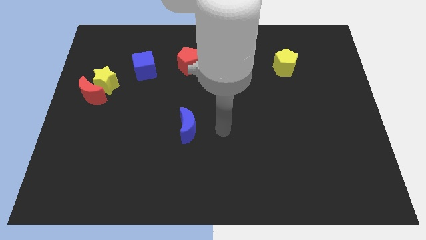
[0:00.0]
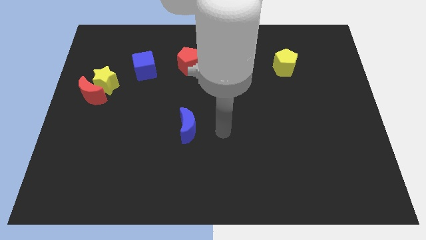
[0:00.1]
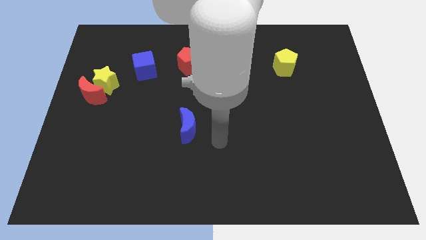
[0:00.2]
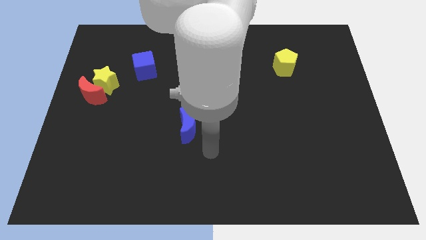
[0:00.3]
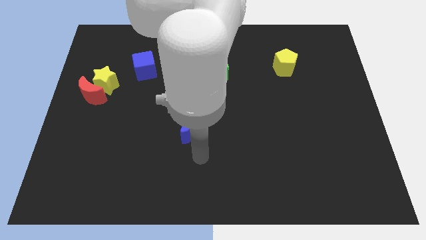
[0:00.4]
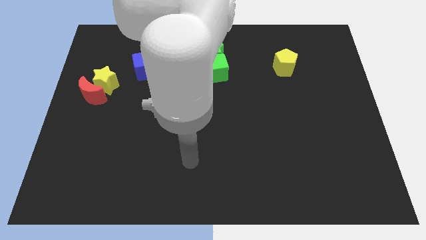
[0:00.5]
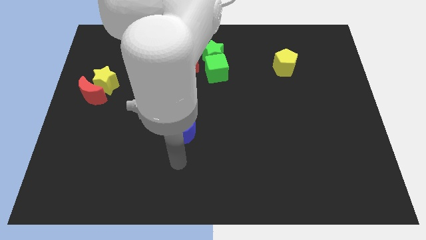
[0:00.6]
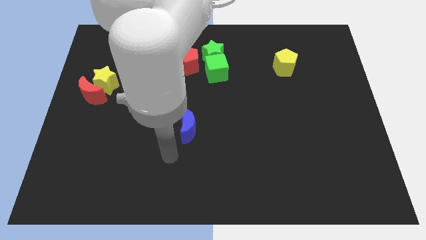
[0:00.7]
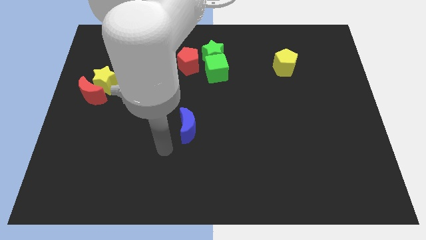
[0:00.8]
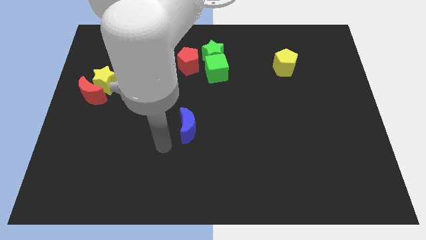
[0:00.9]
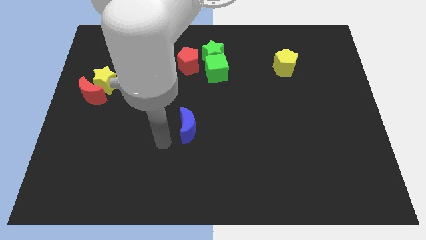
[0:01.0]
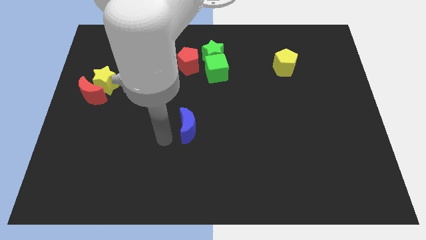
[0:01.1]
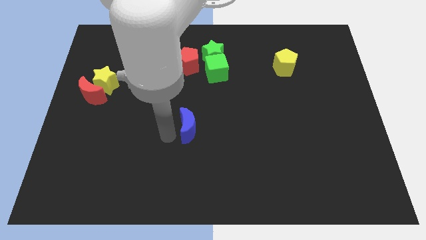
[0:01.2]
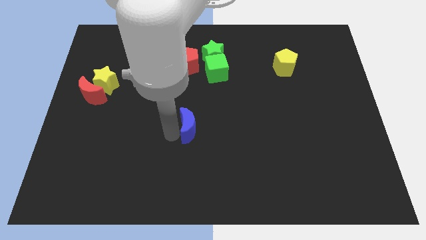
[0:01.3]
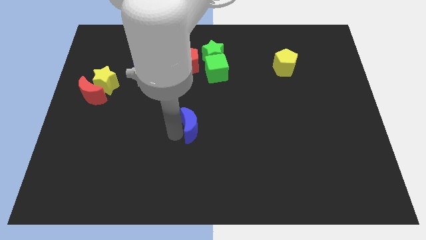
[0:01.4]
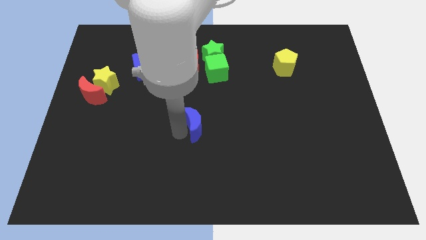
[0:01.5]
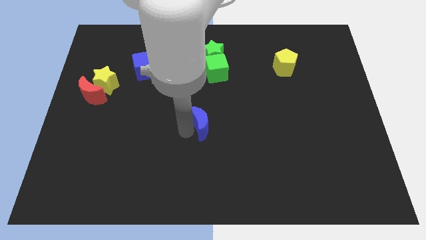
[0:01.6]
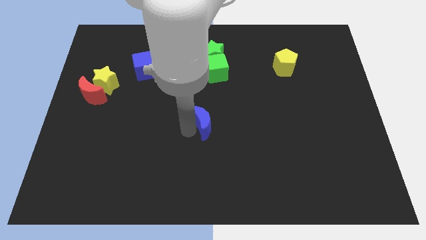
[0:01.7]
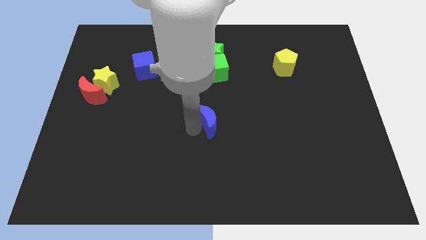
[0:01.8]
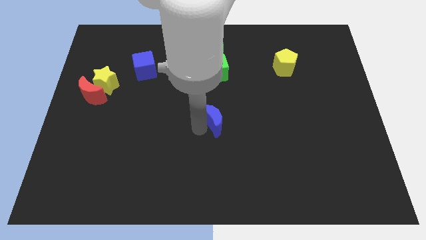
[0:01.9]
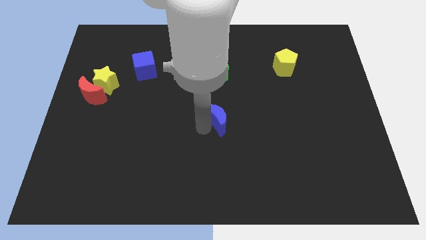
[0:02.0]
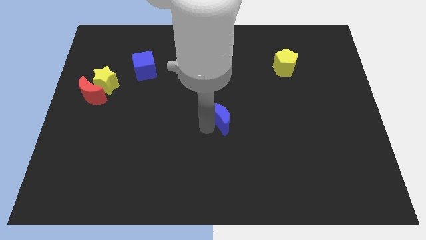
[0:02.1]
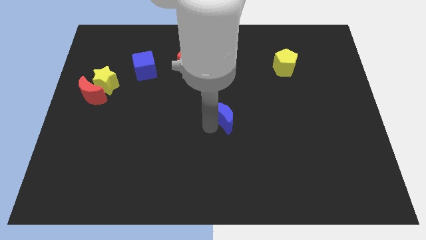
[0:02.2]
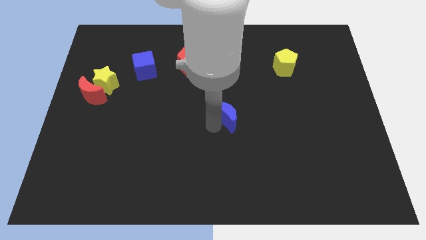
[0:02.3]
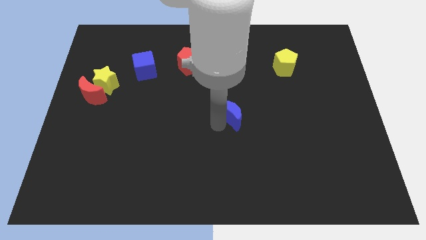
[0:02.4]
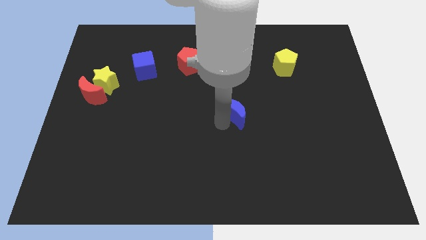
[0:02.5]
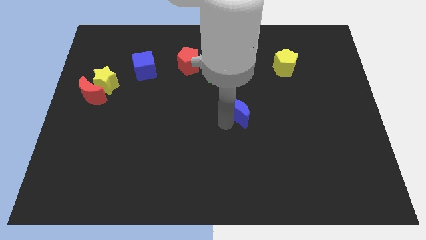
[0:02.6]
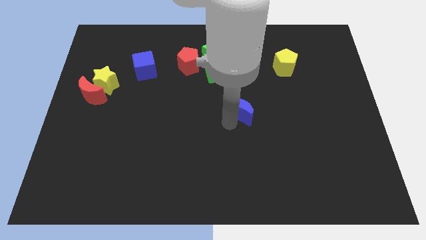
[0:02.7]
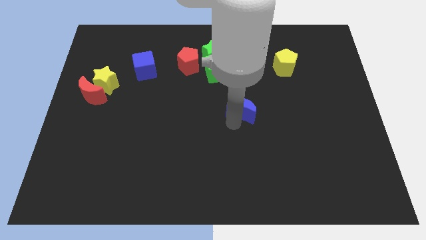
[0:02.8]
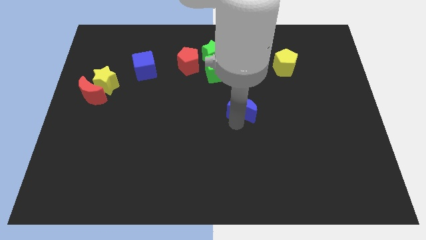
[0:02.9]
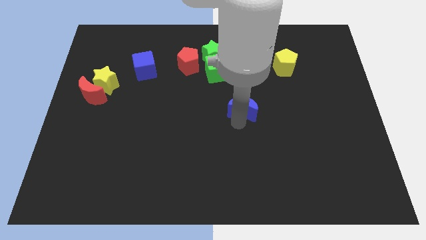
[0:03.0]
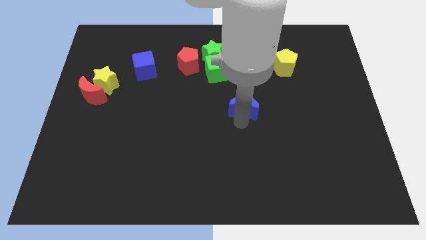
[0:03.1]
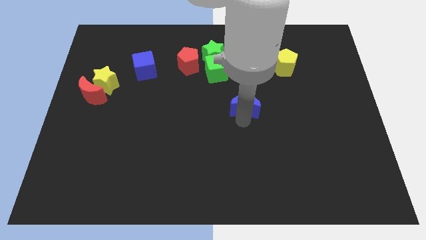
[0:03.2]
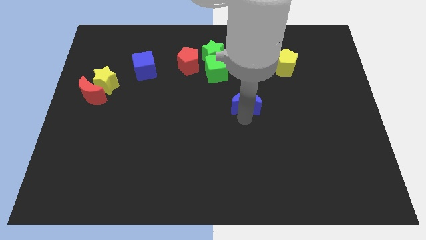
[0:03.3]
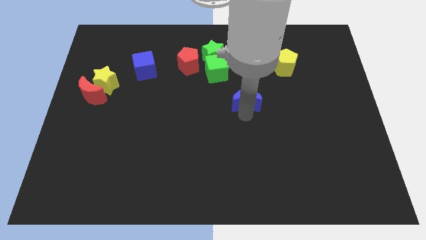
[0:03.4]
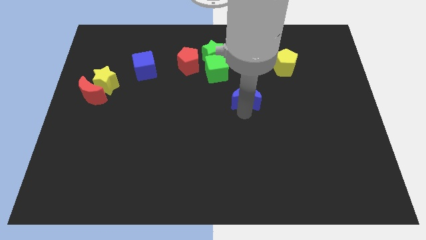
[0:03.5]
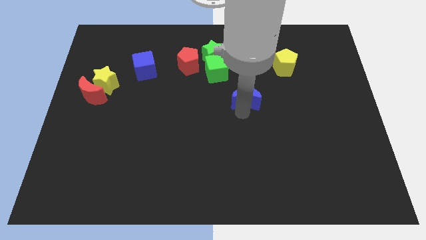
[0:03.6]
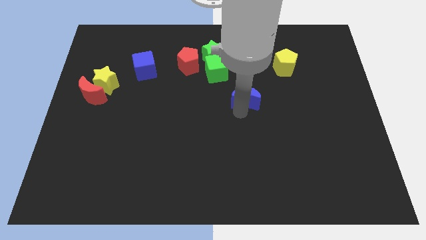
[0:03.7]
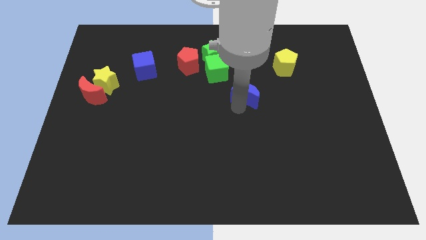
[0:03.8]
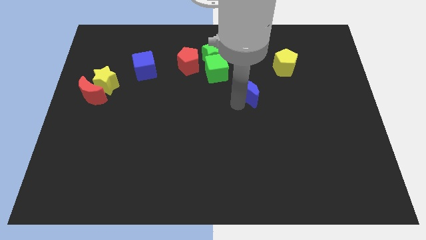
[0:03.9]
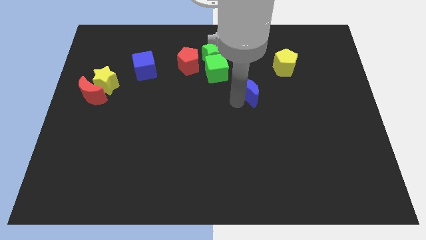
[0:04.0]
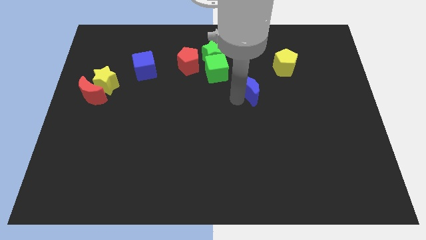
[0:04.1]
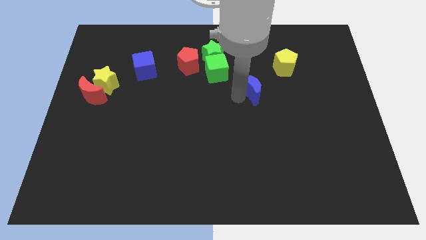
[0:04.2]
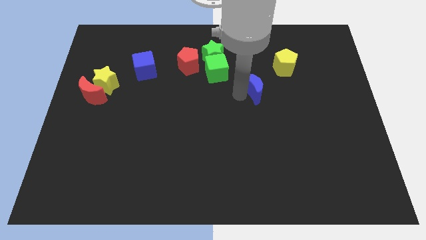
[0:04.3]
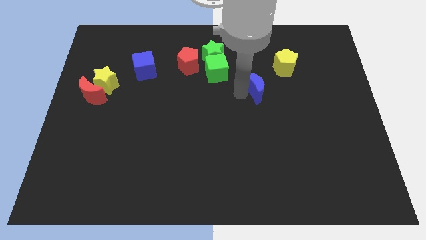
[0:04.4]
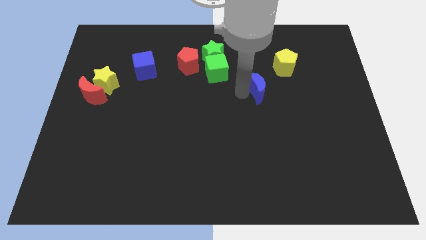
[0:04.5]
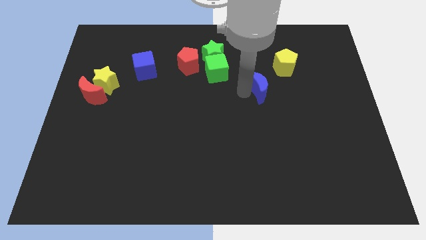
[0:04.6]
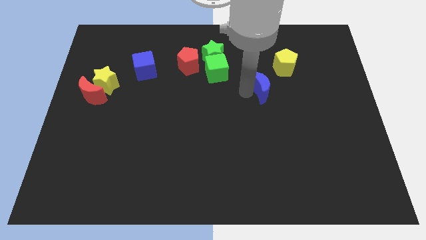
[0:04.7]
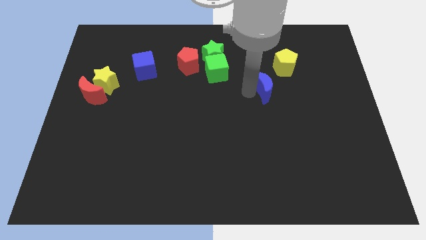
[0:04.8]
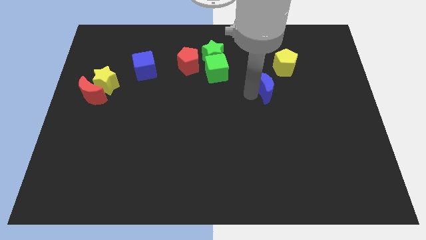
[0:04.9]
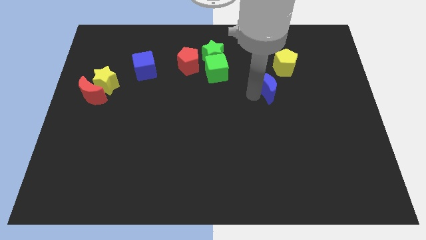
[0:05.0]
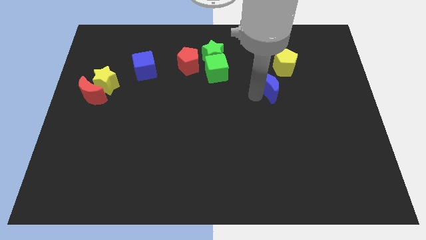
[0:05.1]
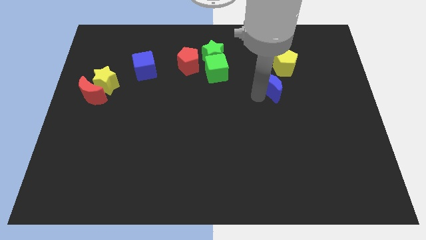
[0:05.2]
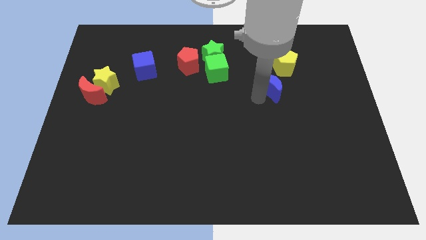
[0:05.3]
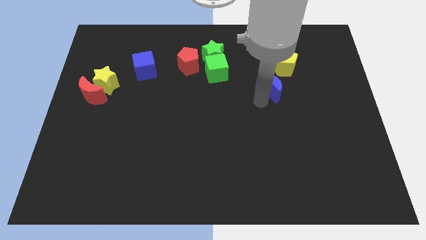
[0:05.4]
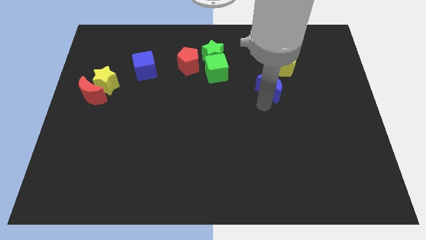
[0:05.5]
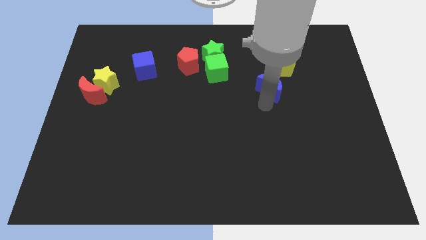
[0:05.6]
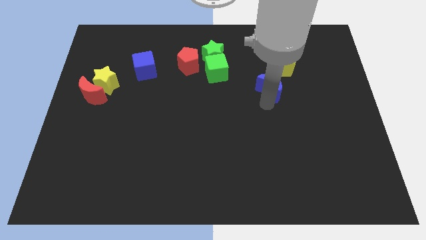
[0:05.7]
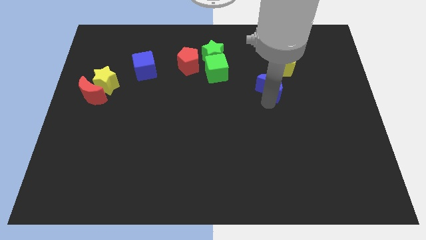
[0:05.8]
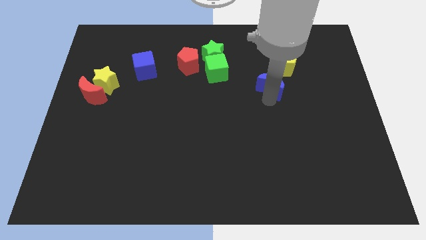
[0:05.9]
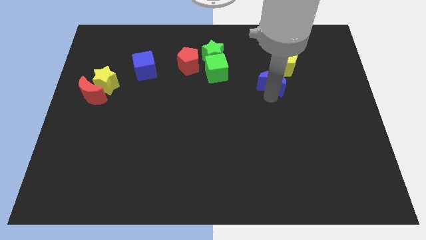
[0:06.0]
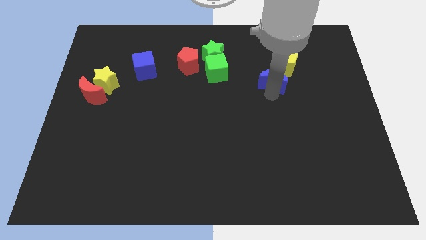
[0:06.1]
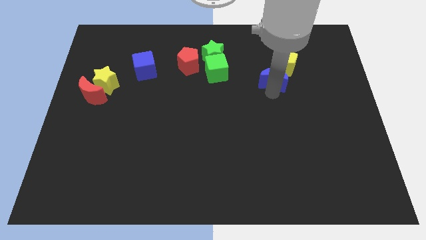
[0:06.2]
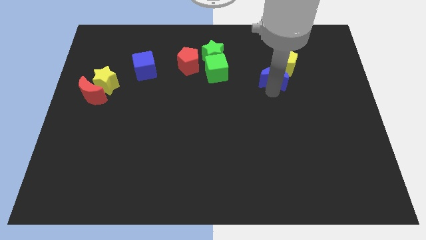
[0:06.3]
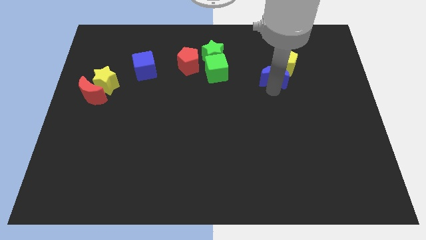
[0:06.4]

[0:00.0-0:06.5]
move the blue moon to the yellow pentagon

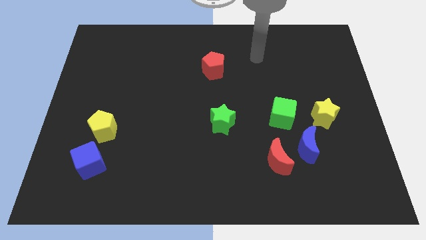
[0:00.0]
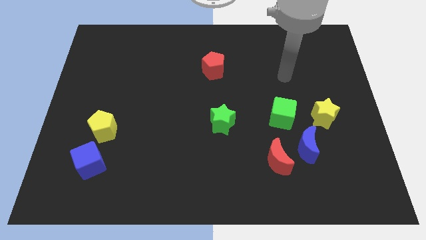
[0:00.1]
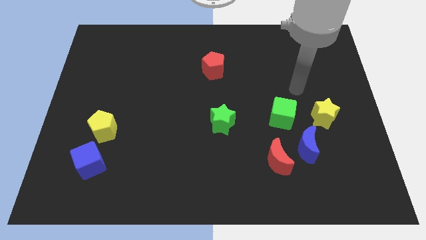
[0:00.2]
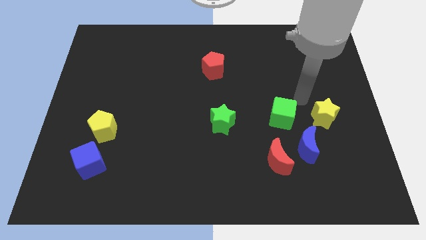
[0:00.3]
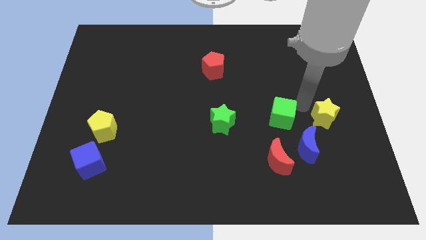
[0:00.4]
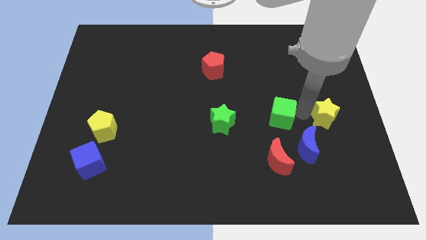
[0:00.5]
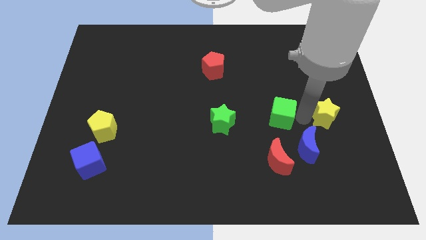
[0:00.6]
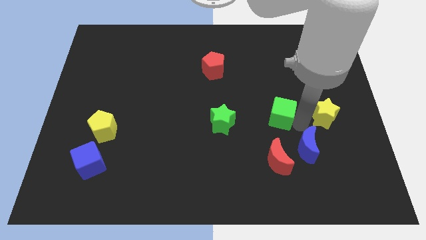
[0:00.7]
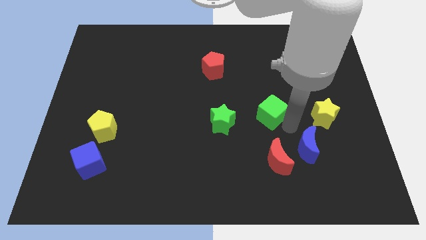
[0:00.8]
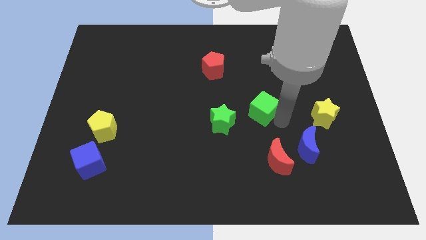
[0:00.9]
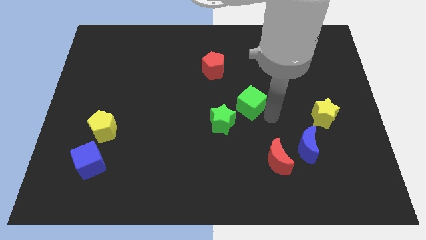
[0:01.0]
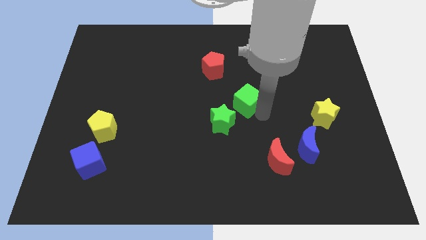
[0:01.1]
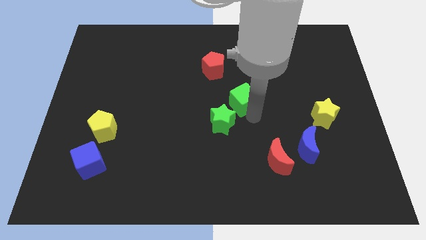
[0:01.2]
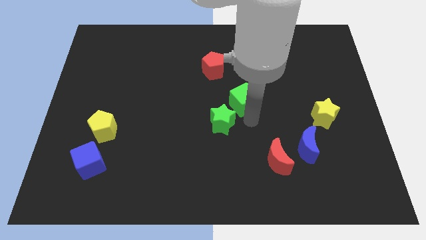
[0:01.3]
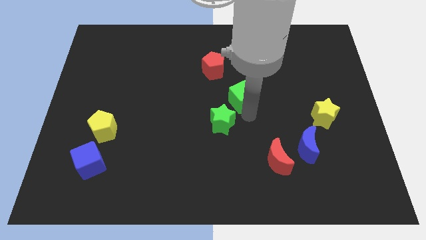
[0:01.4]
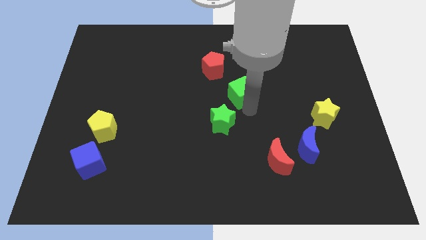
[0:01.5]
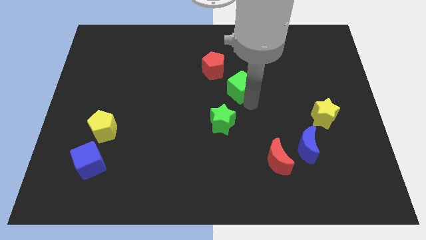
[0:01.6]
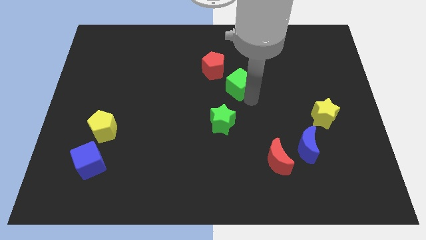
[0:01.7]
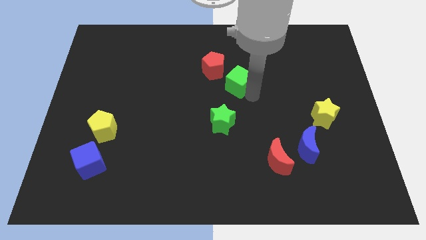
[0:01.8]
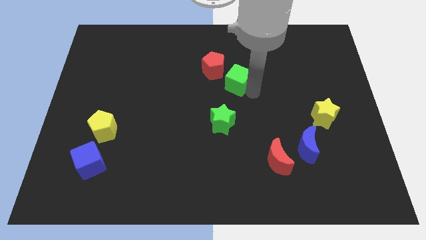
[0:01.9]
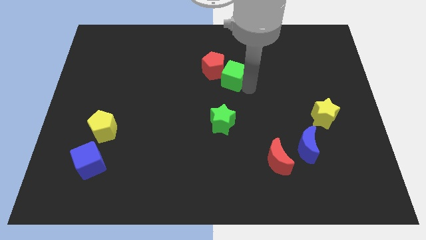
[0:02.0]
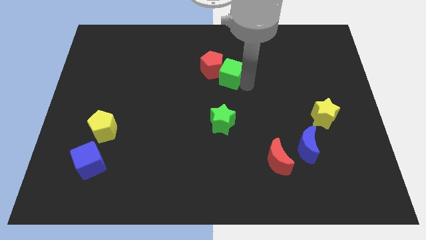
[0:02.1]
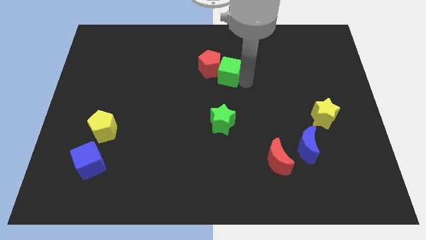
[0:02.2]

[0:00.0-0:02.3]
push the green cube close to the red pentagon
